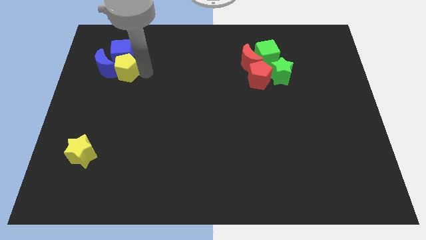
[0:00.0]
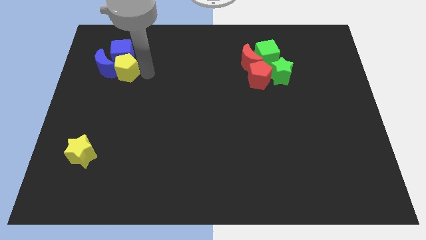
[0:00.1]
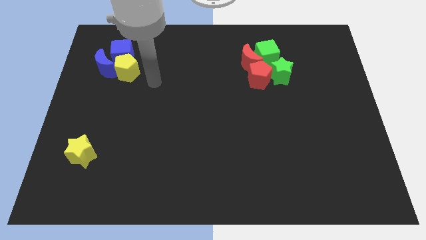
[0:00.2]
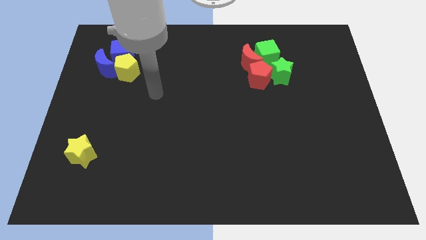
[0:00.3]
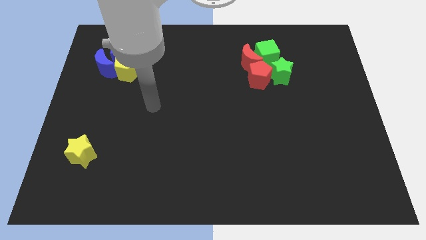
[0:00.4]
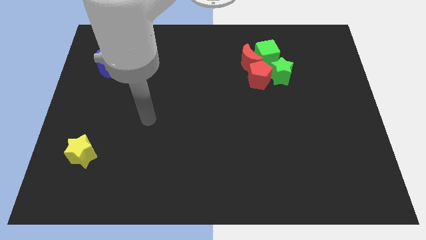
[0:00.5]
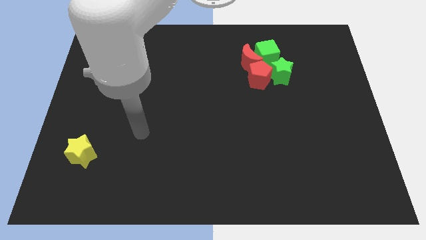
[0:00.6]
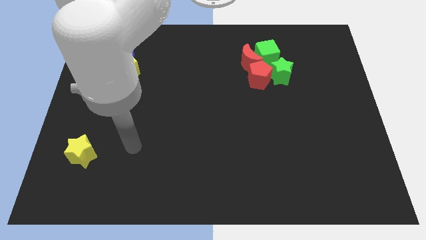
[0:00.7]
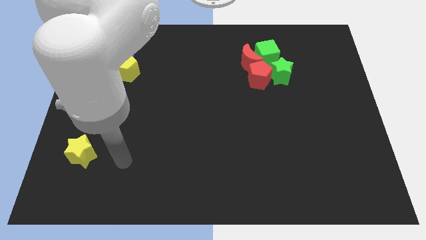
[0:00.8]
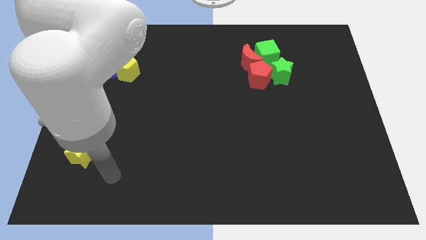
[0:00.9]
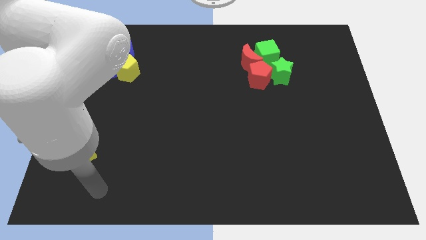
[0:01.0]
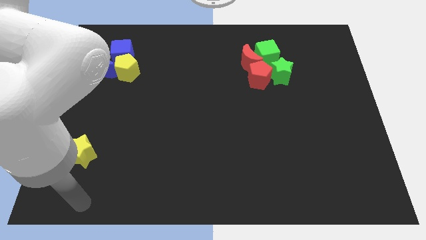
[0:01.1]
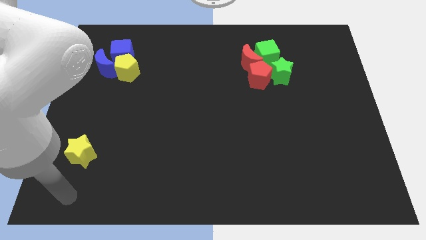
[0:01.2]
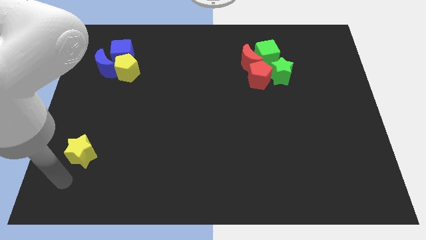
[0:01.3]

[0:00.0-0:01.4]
move your arm to the bottom left of the board

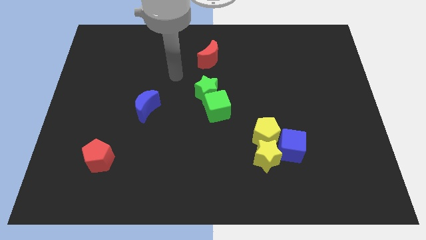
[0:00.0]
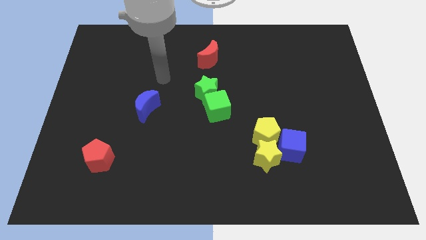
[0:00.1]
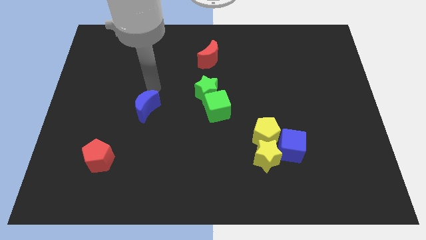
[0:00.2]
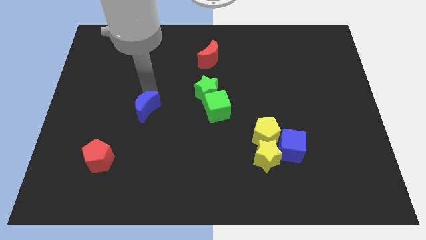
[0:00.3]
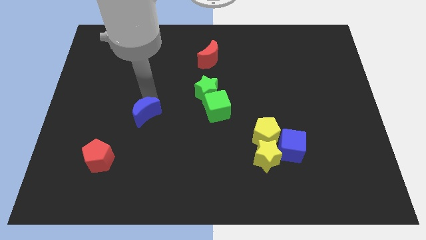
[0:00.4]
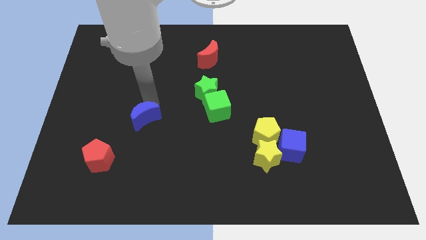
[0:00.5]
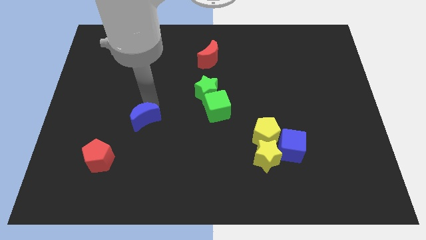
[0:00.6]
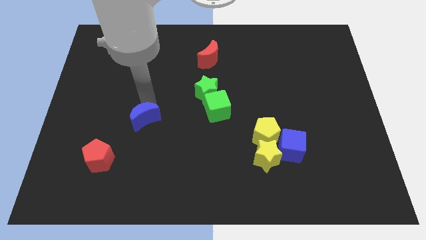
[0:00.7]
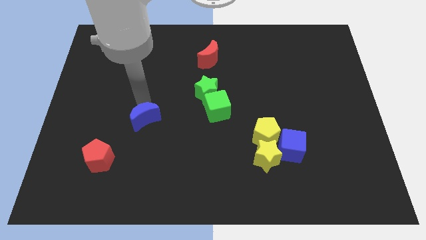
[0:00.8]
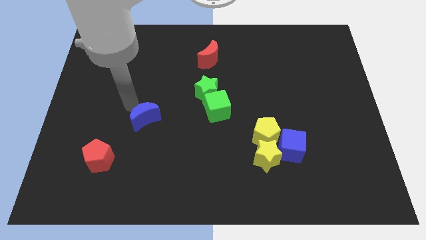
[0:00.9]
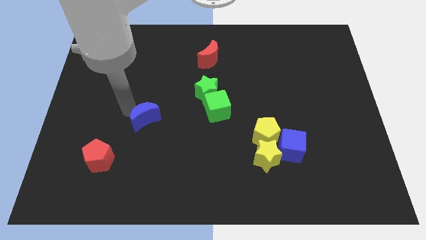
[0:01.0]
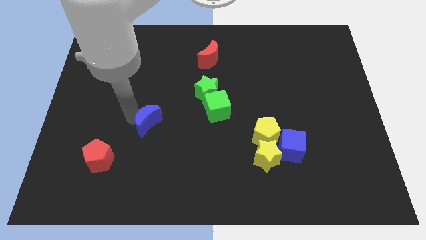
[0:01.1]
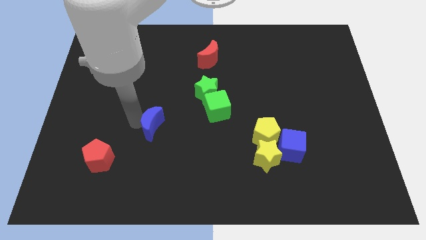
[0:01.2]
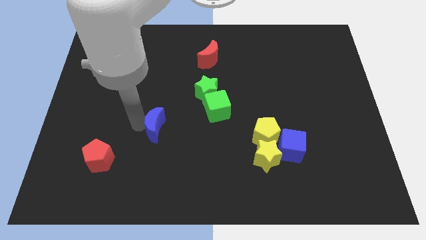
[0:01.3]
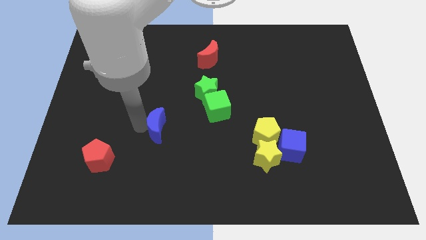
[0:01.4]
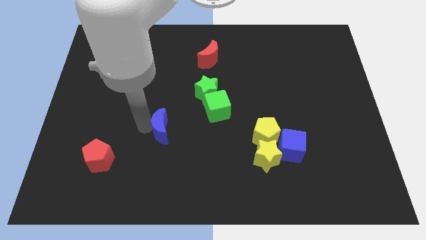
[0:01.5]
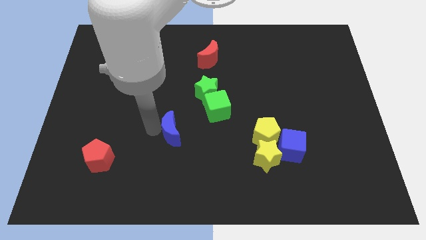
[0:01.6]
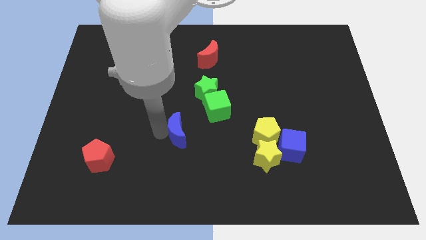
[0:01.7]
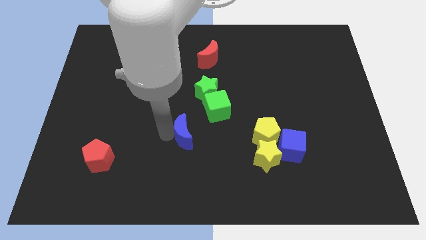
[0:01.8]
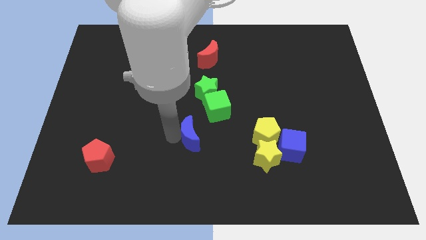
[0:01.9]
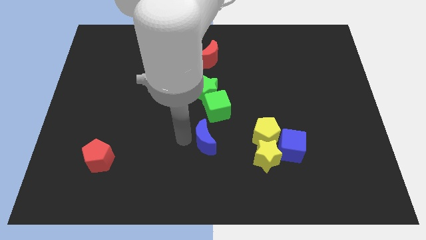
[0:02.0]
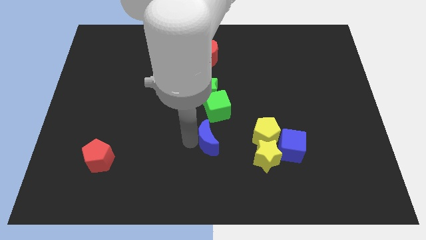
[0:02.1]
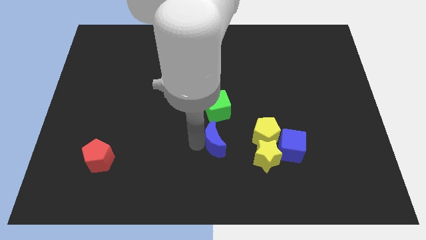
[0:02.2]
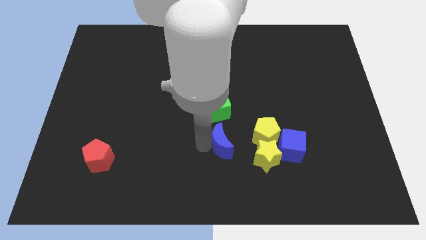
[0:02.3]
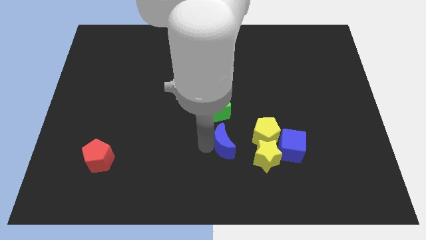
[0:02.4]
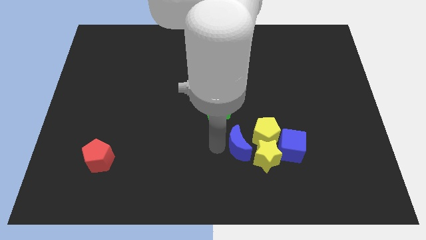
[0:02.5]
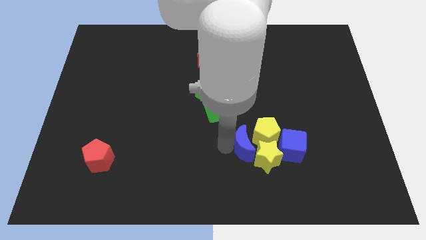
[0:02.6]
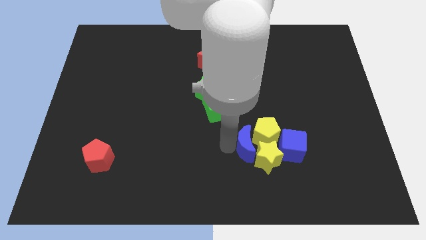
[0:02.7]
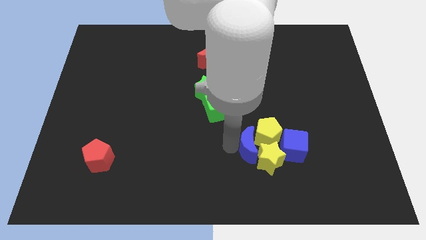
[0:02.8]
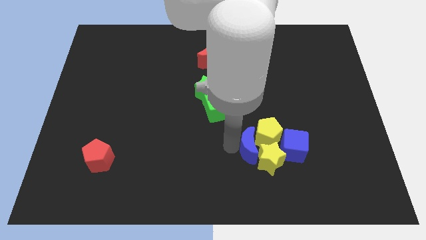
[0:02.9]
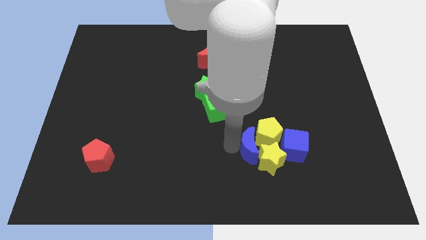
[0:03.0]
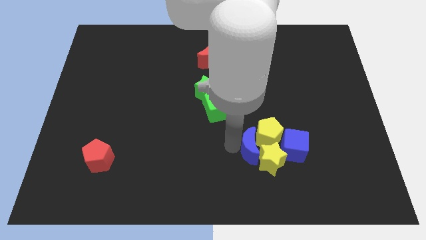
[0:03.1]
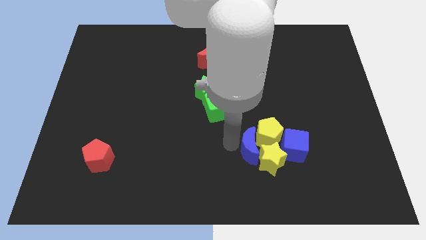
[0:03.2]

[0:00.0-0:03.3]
move the blue crescent into the left side of the yellow blocks

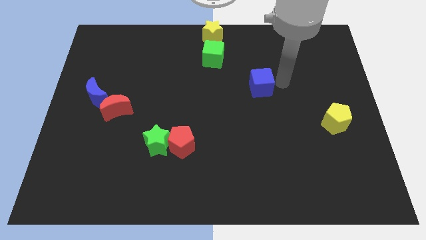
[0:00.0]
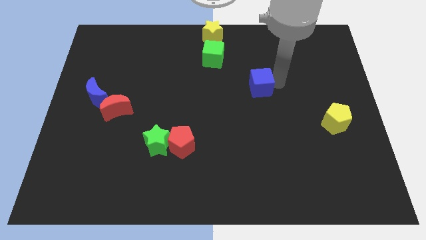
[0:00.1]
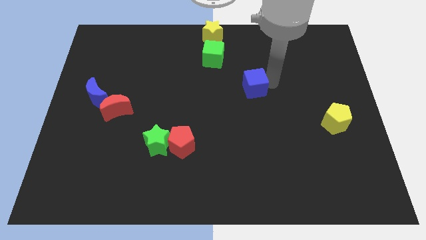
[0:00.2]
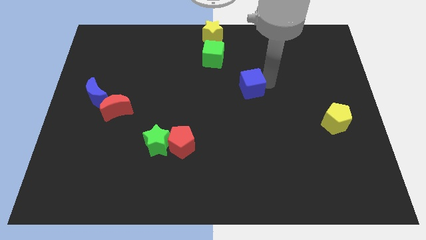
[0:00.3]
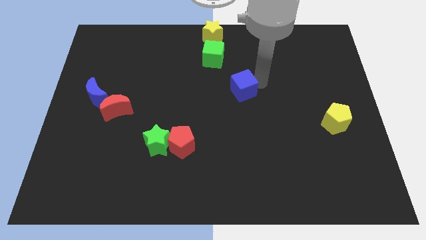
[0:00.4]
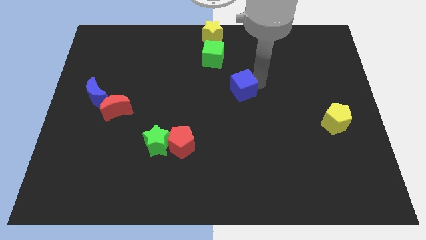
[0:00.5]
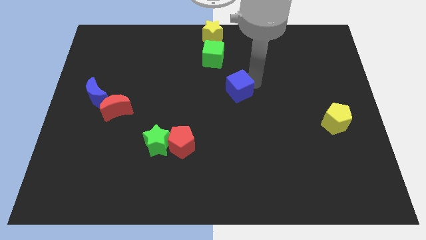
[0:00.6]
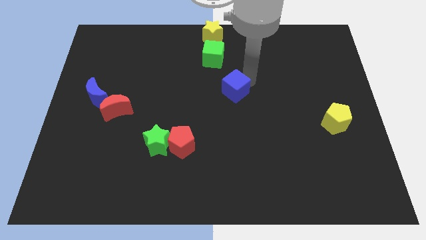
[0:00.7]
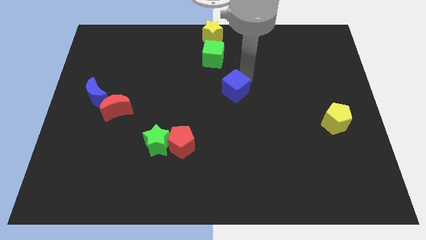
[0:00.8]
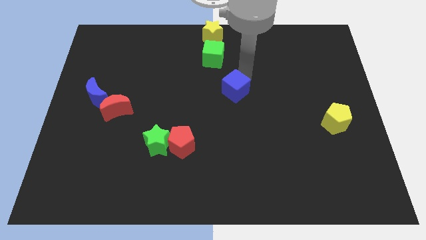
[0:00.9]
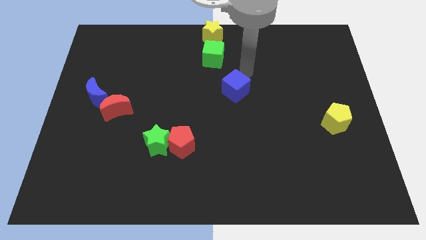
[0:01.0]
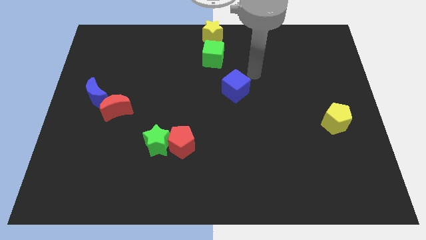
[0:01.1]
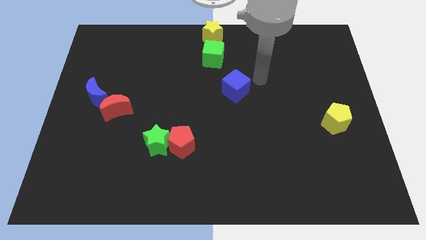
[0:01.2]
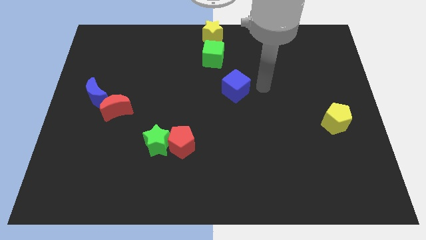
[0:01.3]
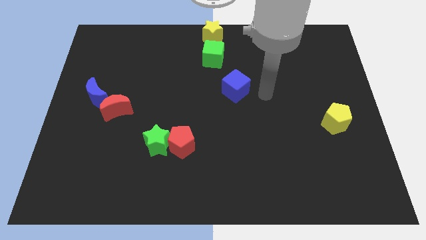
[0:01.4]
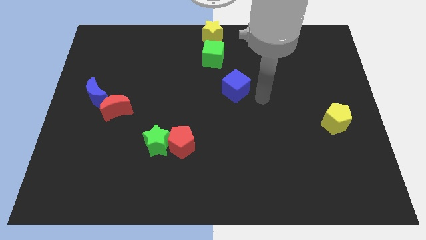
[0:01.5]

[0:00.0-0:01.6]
move the blue cube diagonally to the below of the green cube

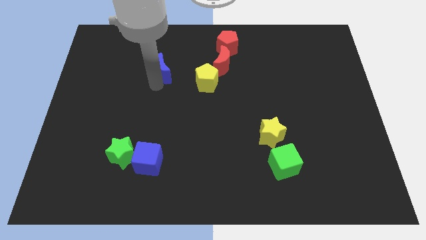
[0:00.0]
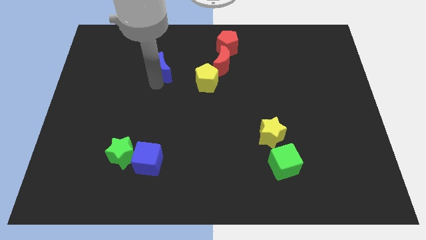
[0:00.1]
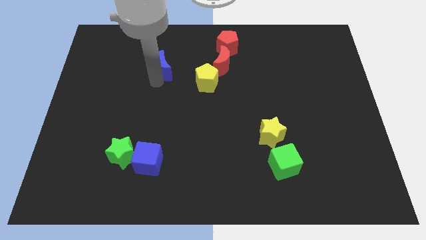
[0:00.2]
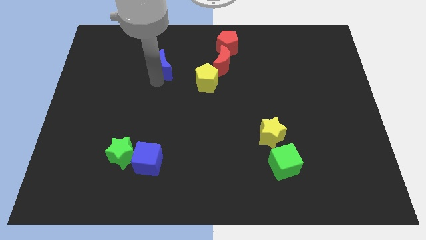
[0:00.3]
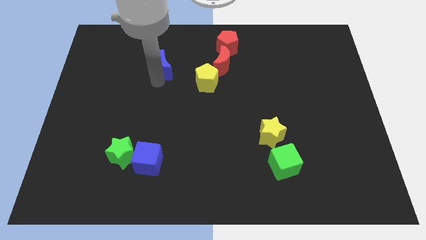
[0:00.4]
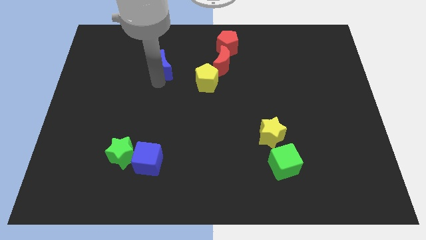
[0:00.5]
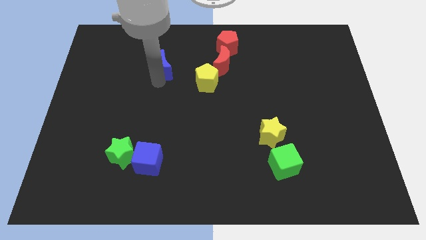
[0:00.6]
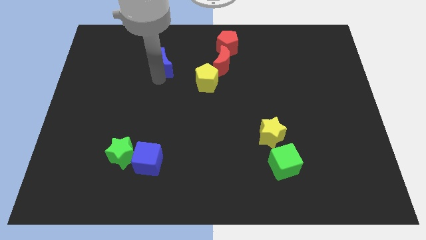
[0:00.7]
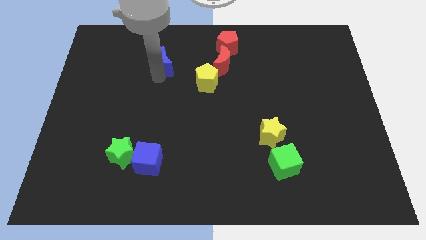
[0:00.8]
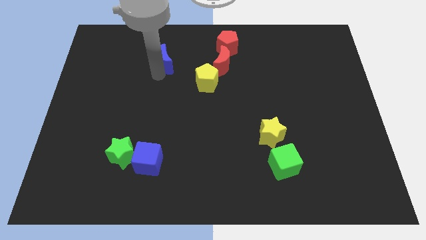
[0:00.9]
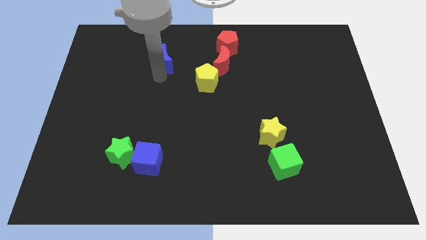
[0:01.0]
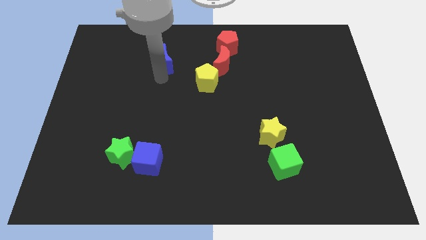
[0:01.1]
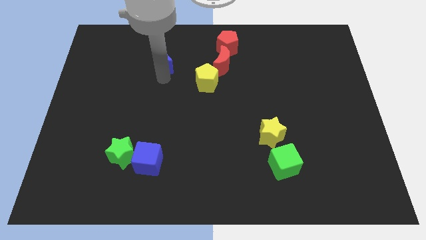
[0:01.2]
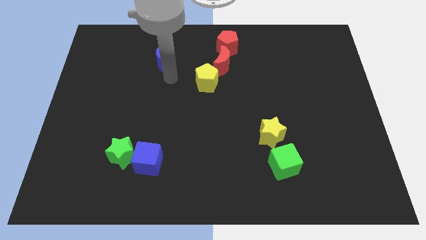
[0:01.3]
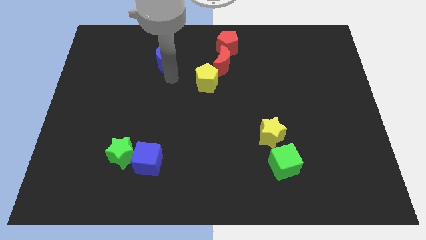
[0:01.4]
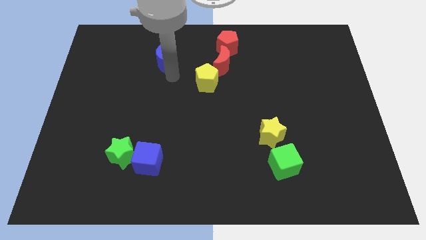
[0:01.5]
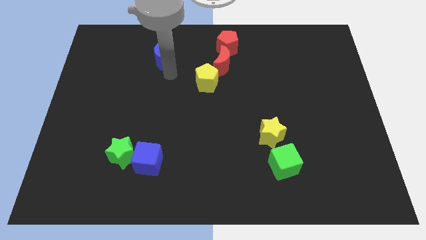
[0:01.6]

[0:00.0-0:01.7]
move the blue moon parallel left to the red moon

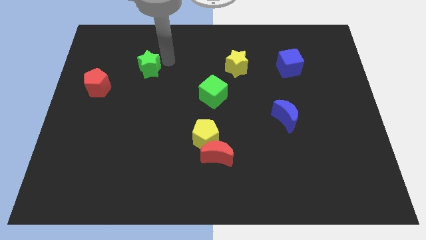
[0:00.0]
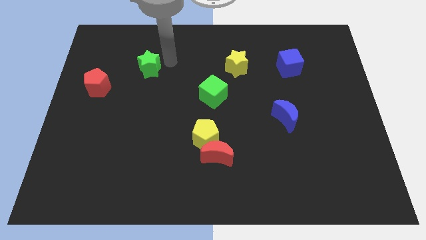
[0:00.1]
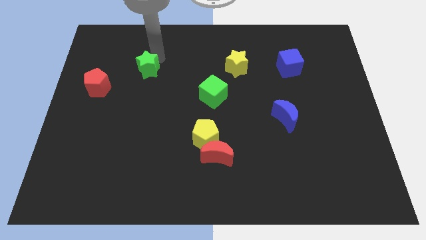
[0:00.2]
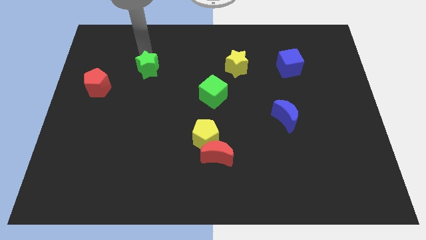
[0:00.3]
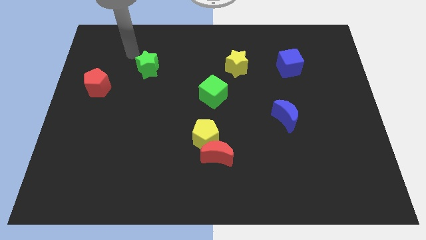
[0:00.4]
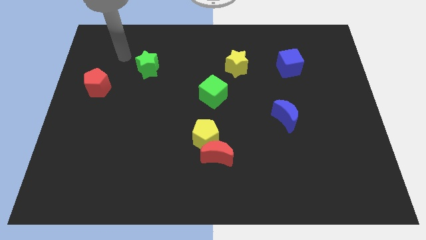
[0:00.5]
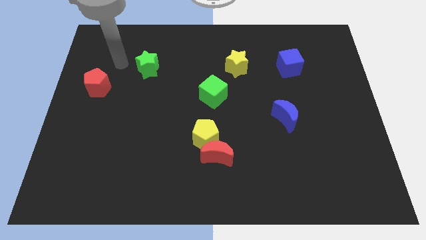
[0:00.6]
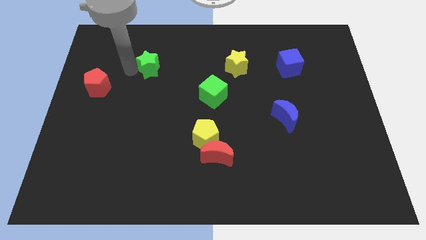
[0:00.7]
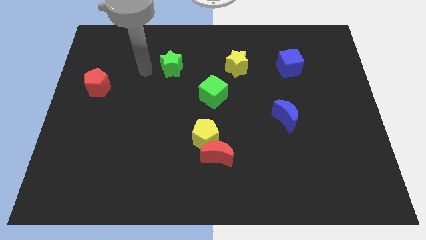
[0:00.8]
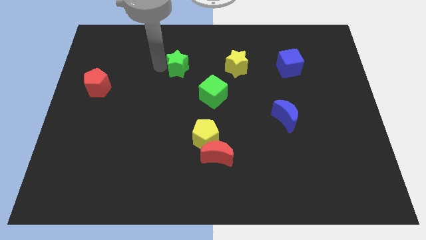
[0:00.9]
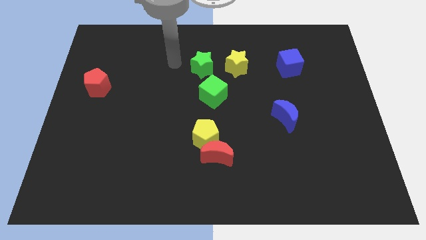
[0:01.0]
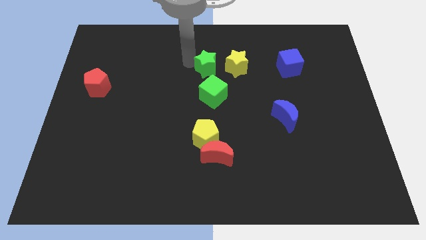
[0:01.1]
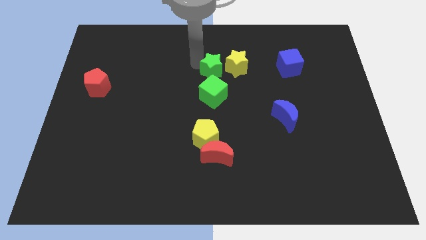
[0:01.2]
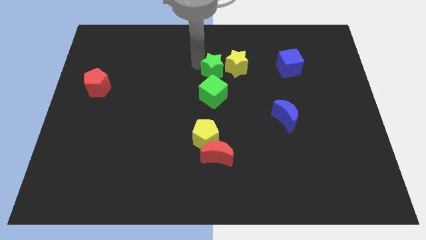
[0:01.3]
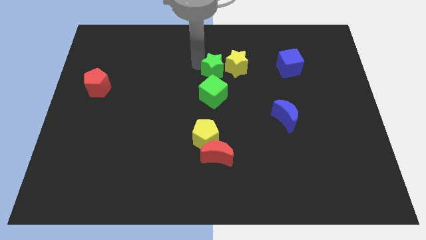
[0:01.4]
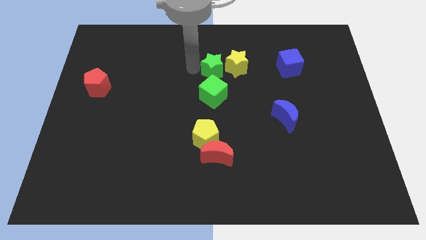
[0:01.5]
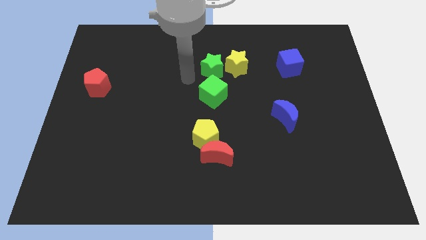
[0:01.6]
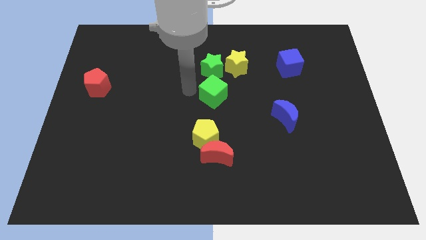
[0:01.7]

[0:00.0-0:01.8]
place the green star into green cube on top
